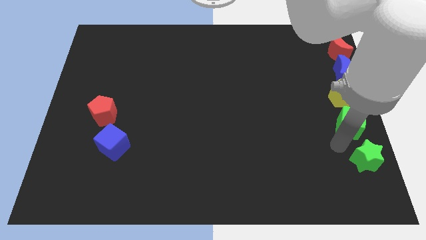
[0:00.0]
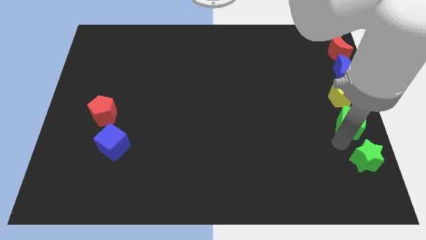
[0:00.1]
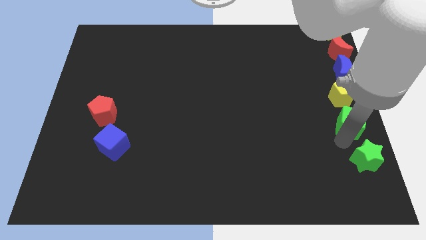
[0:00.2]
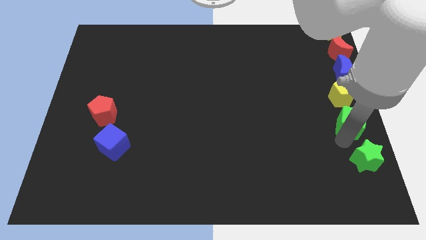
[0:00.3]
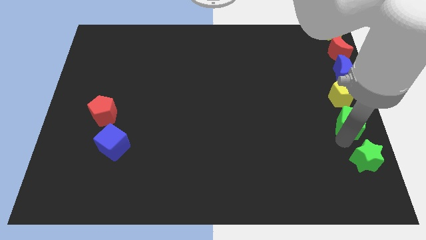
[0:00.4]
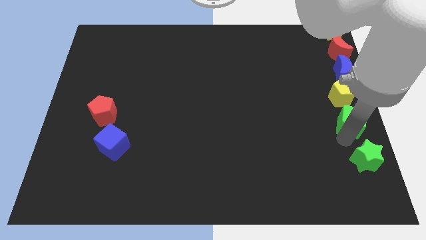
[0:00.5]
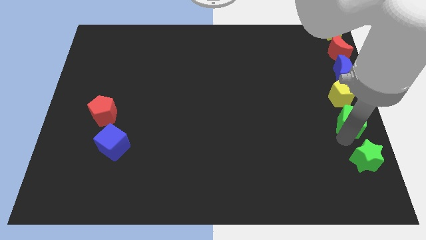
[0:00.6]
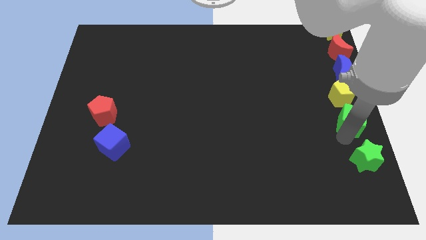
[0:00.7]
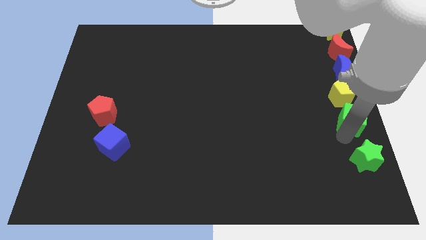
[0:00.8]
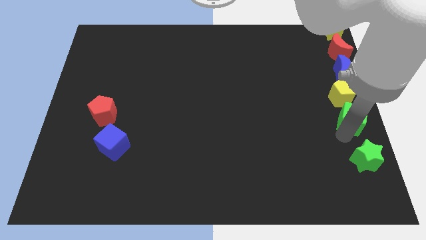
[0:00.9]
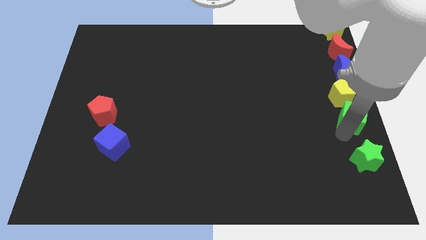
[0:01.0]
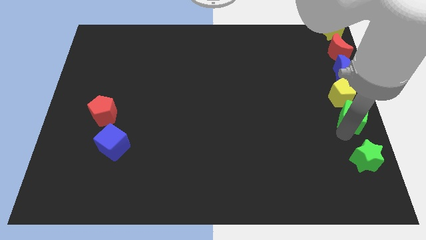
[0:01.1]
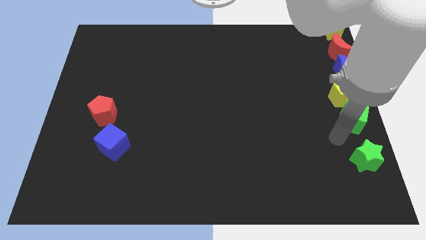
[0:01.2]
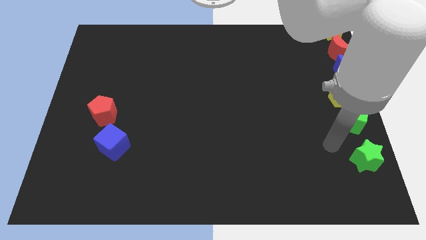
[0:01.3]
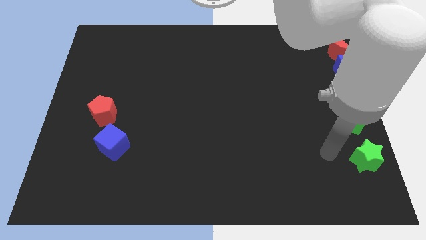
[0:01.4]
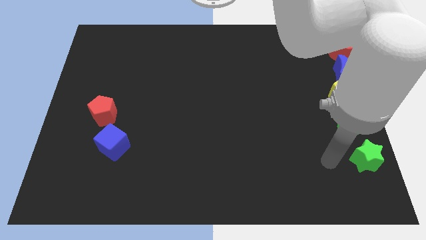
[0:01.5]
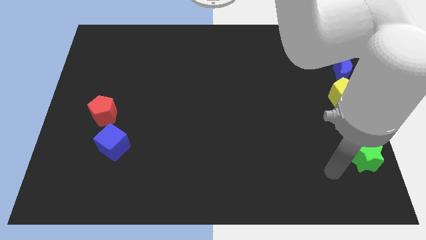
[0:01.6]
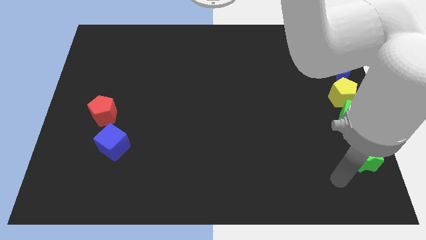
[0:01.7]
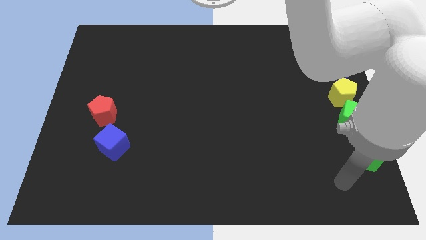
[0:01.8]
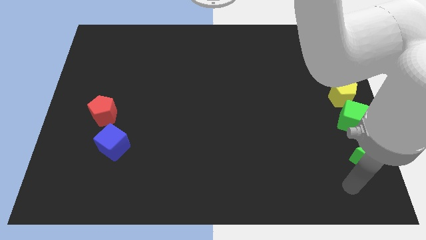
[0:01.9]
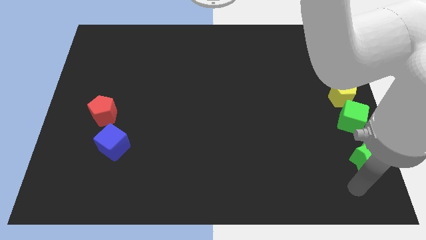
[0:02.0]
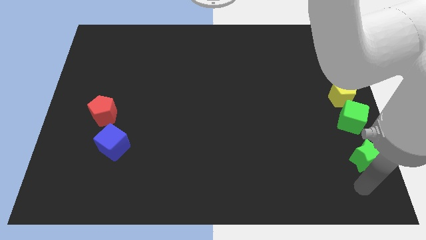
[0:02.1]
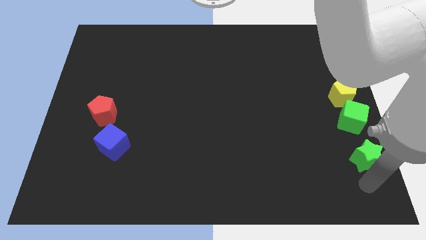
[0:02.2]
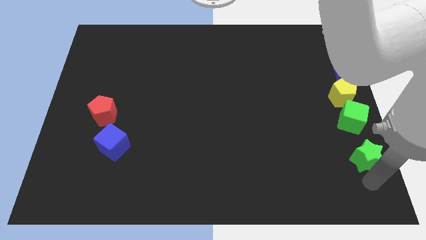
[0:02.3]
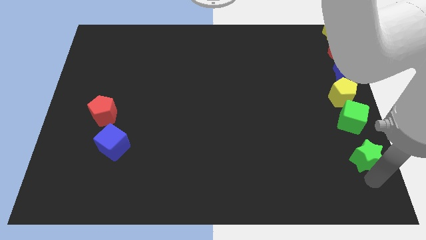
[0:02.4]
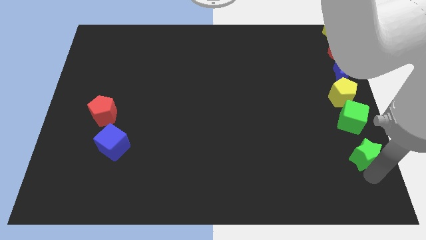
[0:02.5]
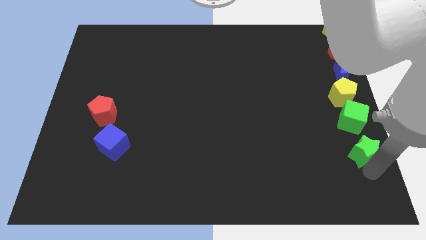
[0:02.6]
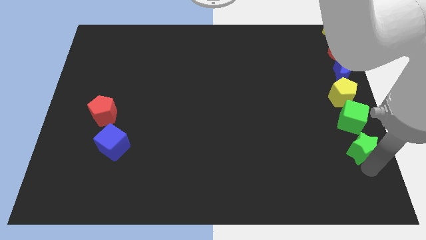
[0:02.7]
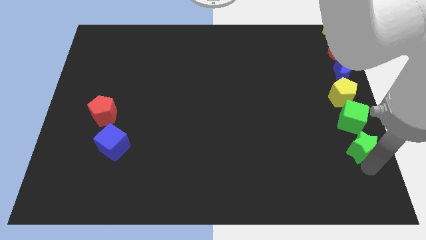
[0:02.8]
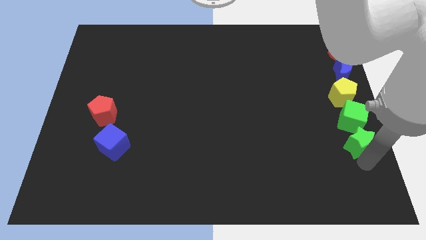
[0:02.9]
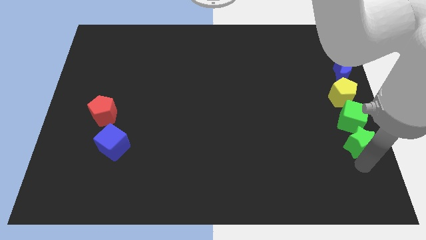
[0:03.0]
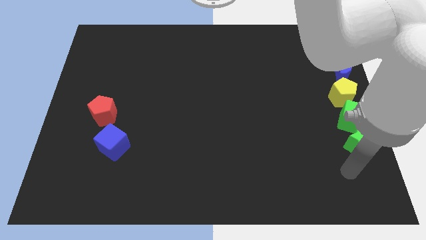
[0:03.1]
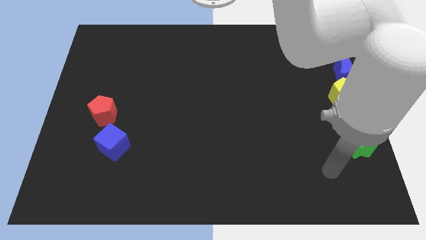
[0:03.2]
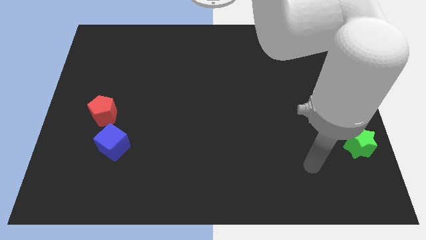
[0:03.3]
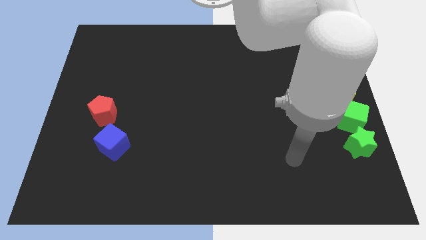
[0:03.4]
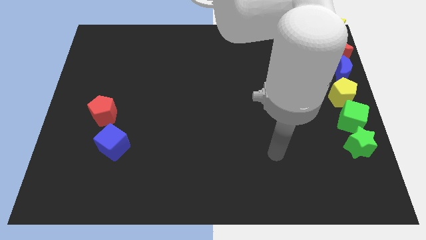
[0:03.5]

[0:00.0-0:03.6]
move the green star below the green cube

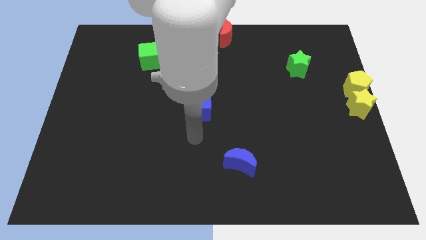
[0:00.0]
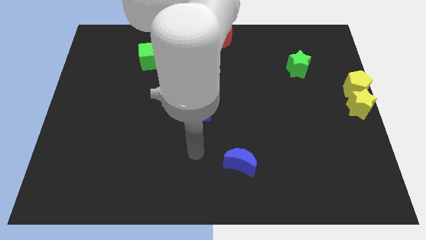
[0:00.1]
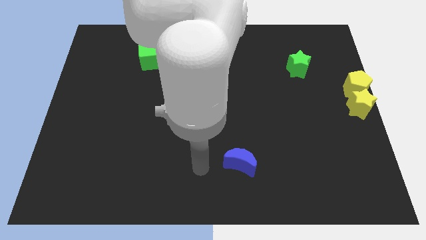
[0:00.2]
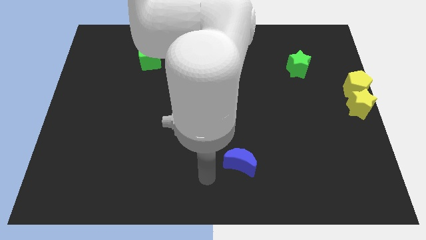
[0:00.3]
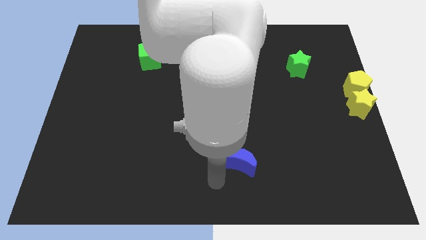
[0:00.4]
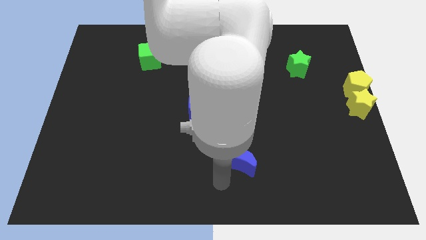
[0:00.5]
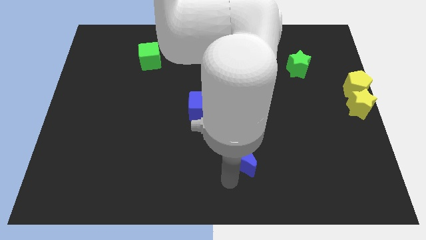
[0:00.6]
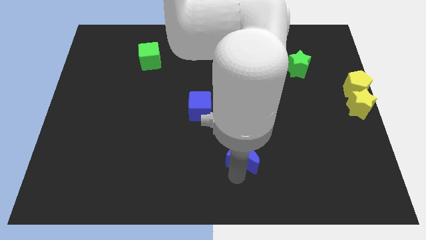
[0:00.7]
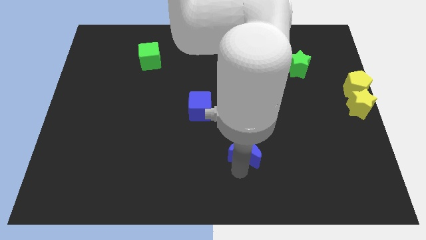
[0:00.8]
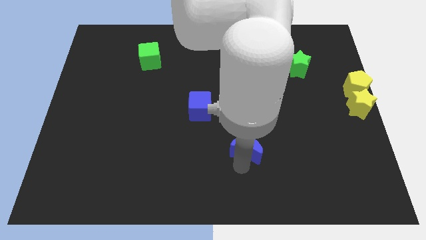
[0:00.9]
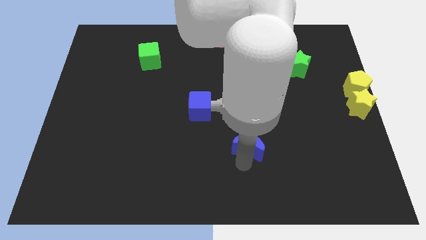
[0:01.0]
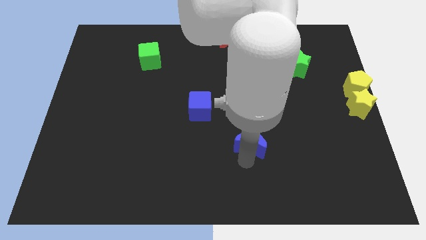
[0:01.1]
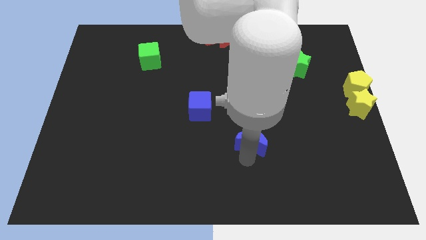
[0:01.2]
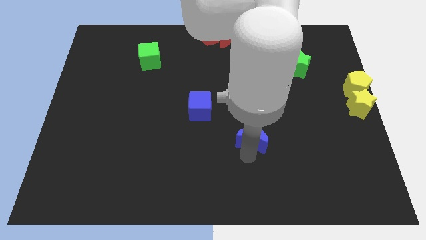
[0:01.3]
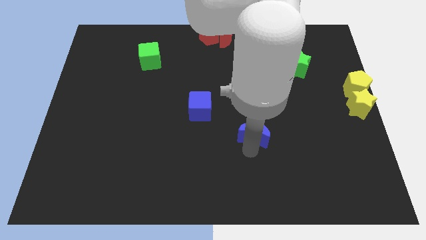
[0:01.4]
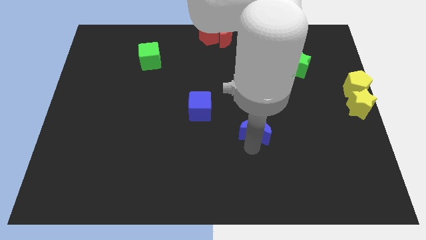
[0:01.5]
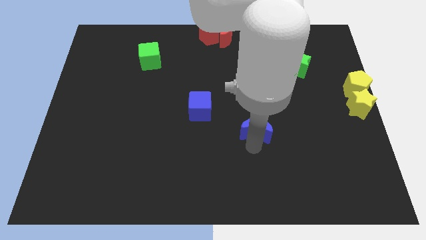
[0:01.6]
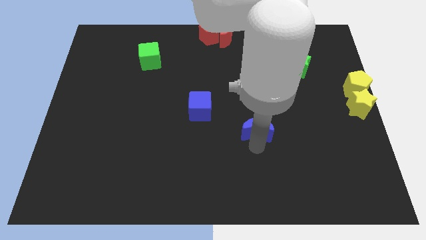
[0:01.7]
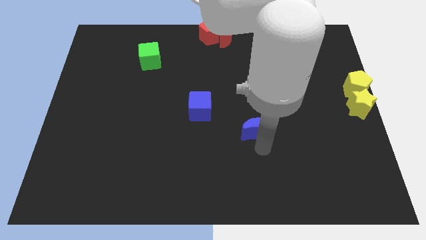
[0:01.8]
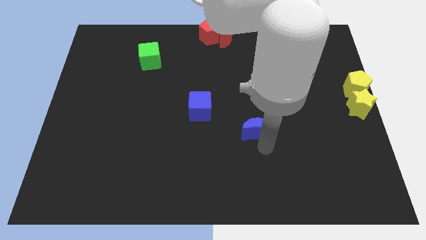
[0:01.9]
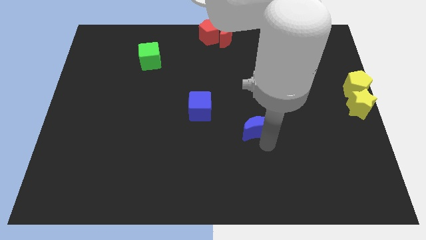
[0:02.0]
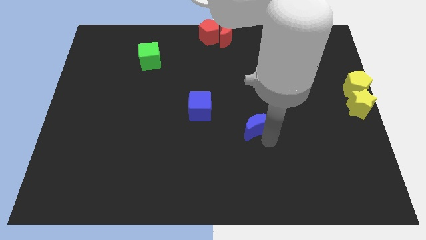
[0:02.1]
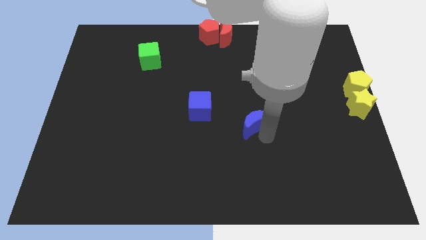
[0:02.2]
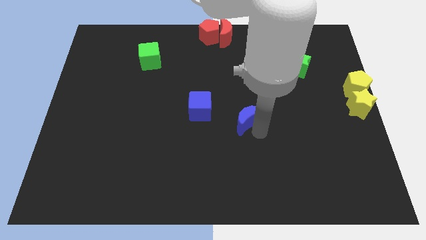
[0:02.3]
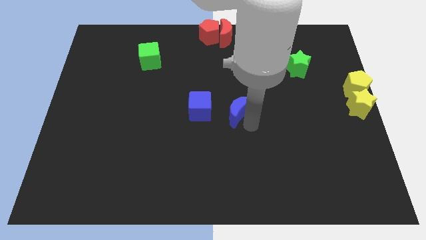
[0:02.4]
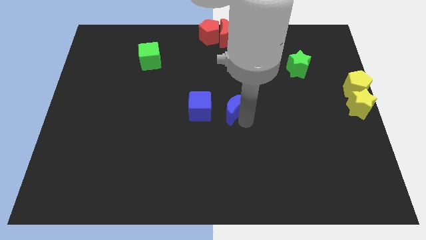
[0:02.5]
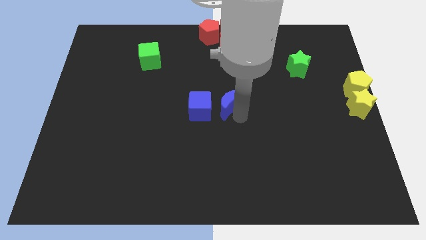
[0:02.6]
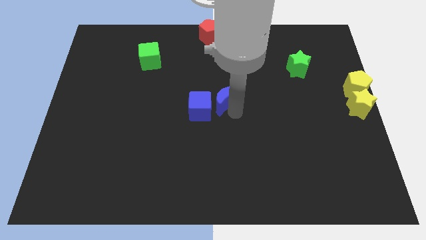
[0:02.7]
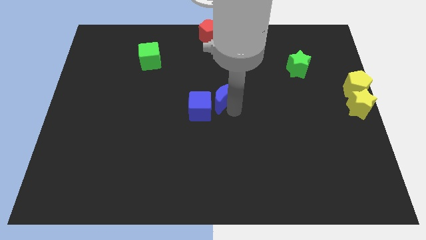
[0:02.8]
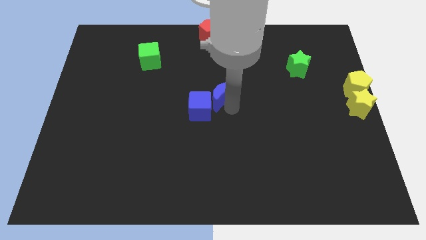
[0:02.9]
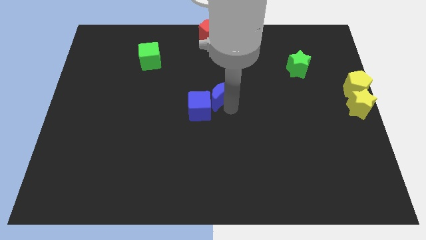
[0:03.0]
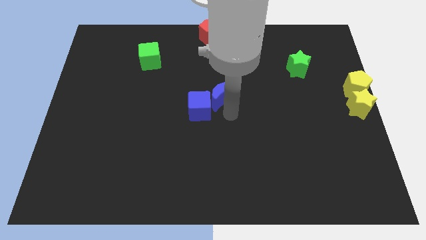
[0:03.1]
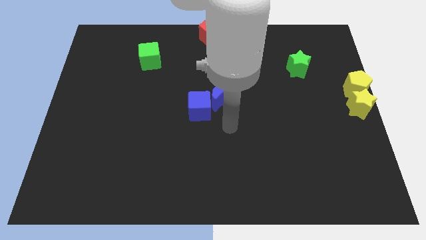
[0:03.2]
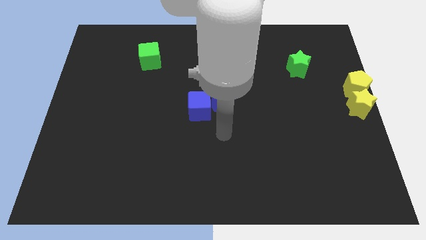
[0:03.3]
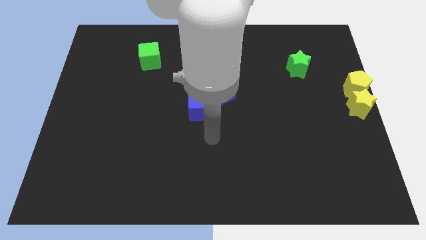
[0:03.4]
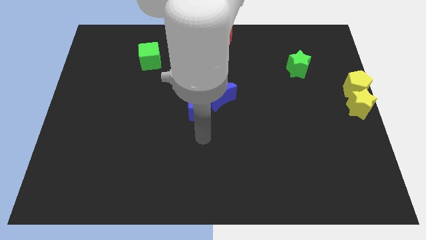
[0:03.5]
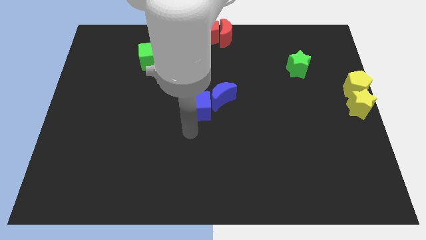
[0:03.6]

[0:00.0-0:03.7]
place the blue moon to the right top of the blue cube

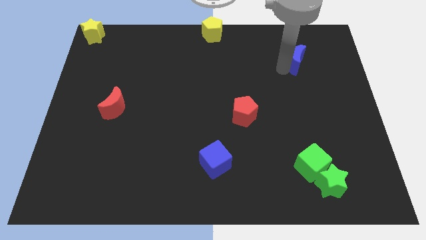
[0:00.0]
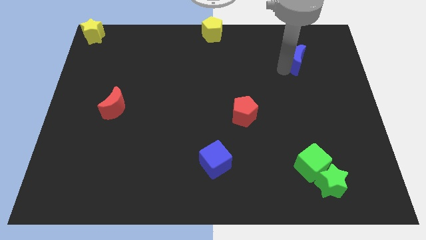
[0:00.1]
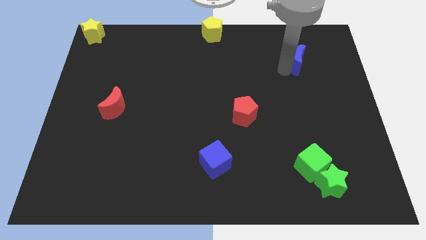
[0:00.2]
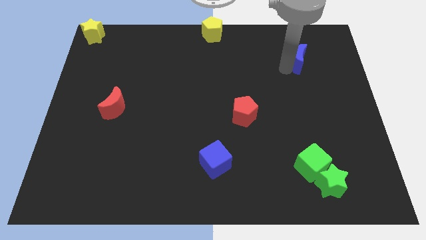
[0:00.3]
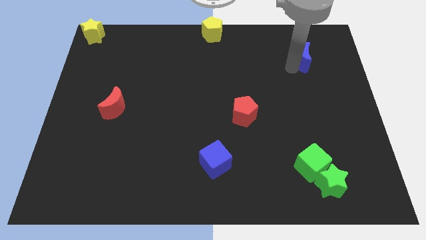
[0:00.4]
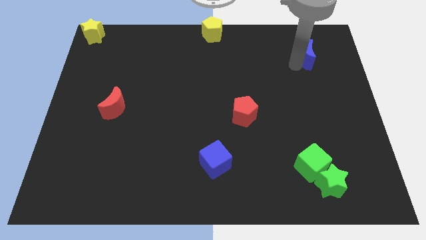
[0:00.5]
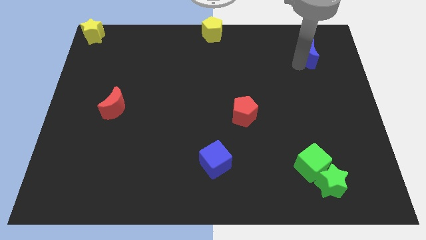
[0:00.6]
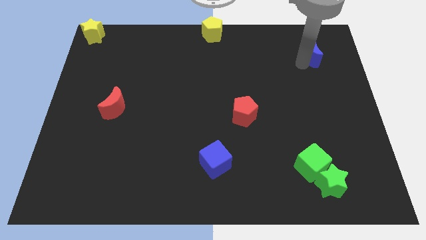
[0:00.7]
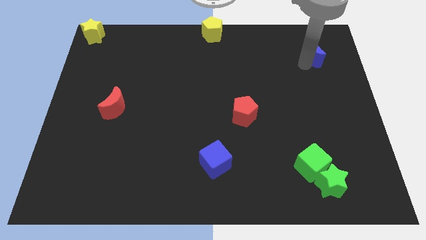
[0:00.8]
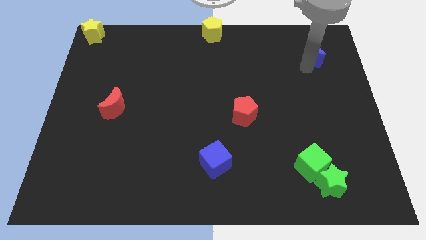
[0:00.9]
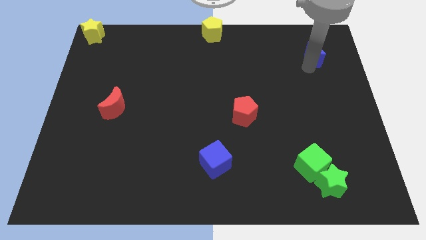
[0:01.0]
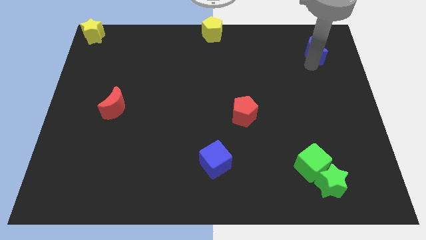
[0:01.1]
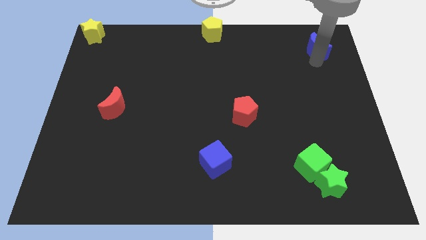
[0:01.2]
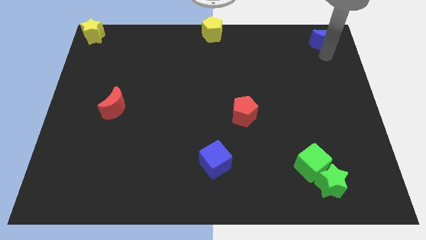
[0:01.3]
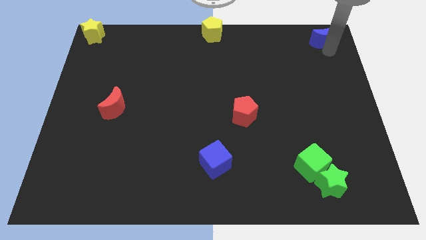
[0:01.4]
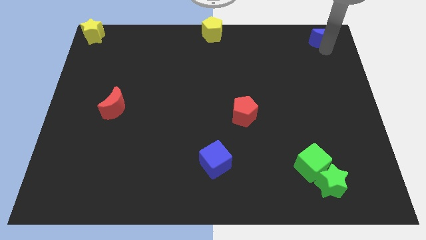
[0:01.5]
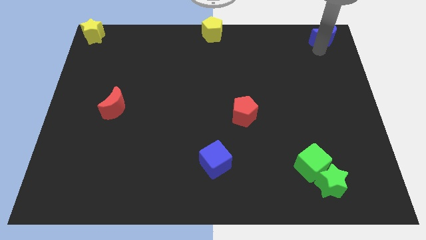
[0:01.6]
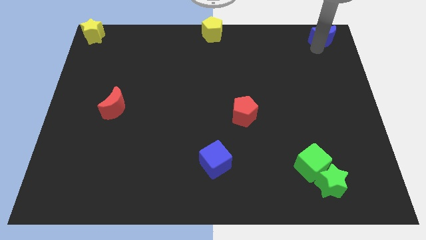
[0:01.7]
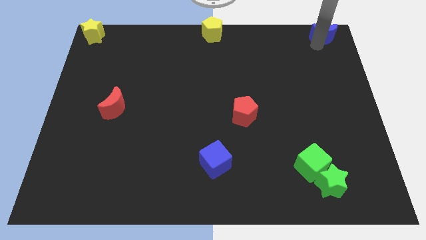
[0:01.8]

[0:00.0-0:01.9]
move the blue moon towards the top right
